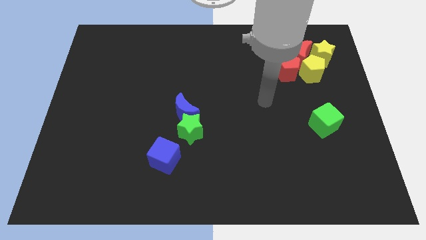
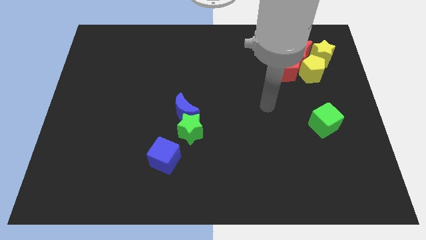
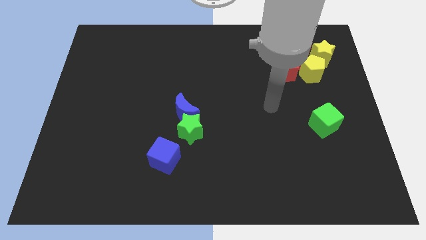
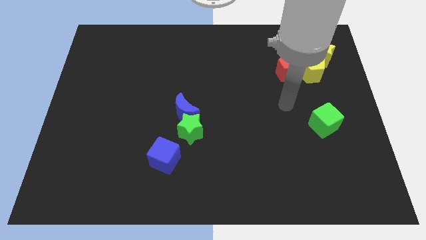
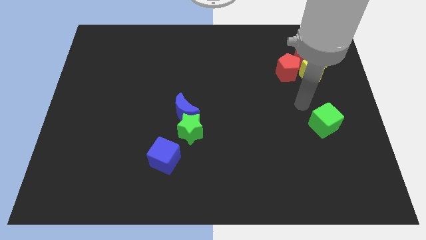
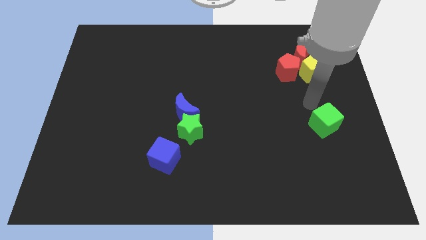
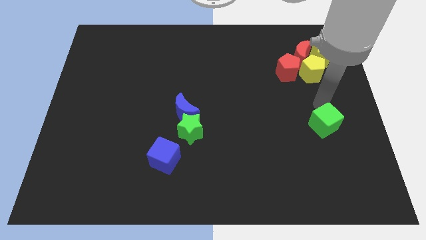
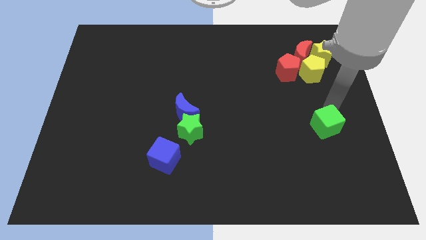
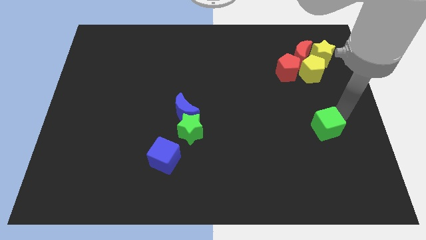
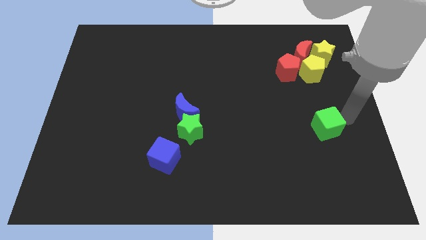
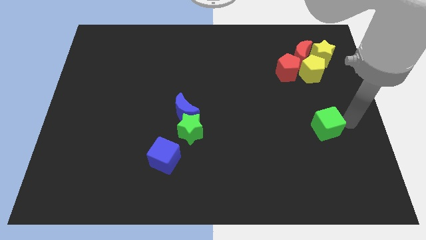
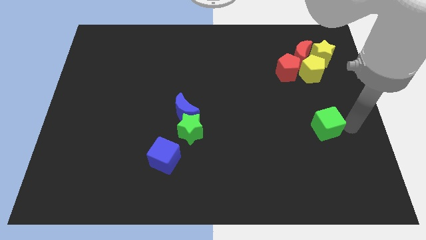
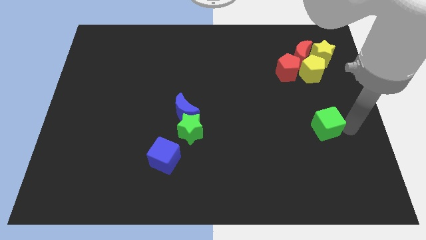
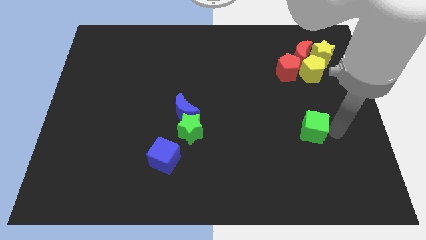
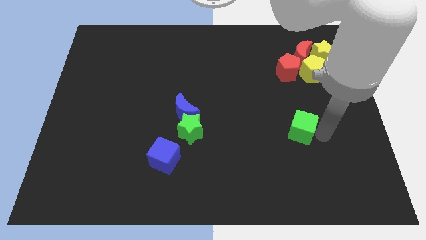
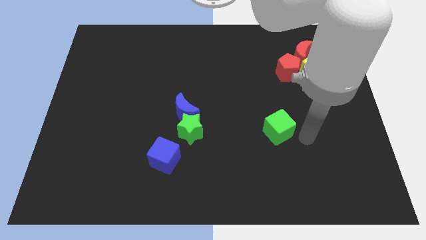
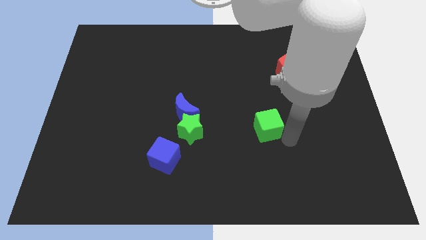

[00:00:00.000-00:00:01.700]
move the green cube to the right of the green star

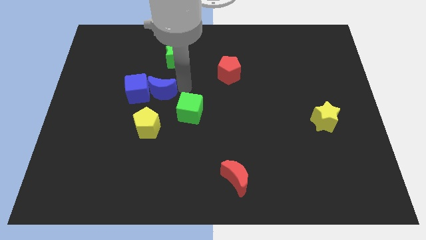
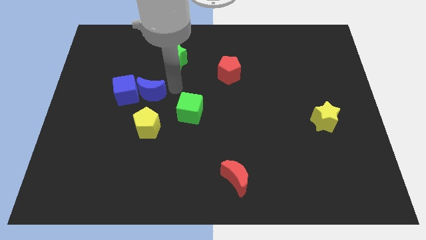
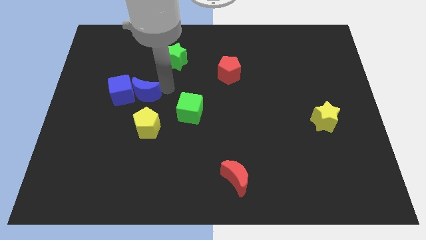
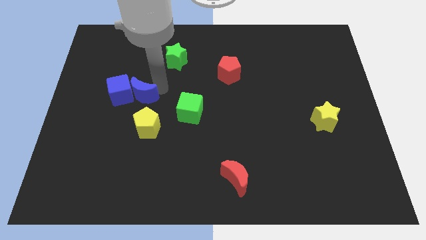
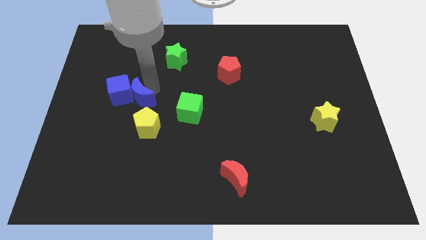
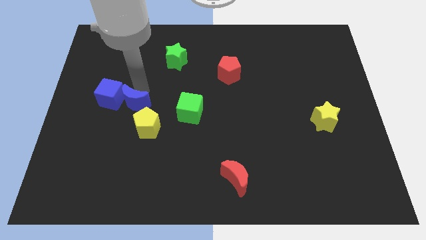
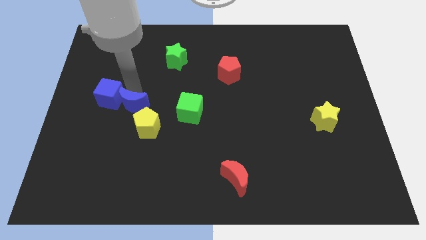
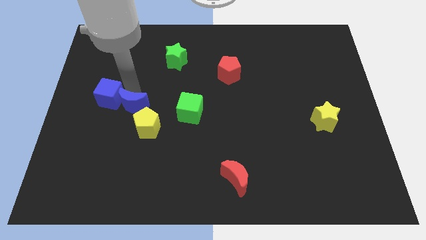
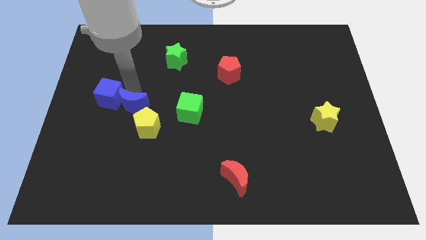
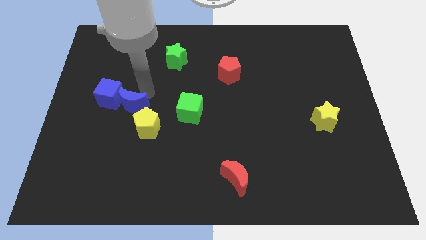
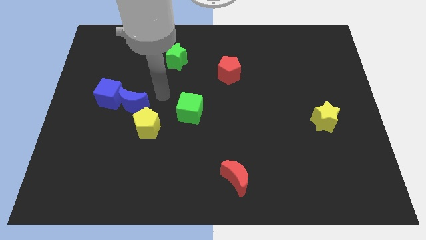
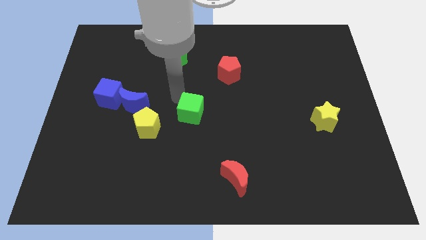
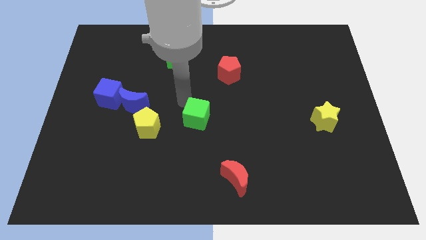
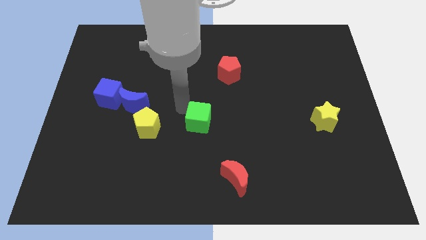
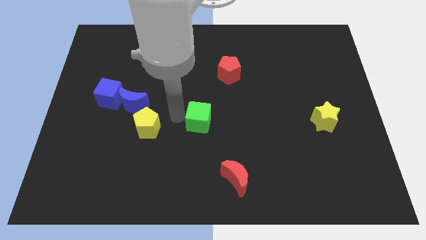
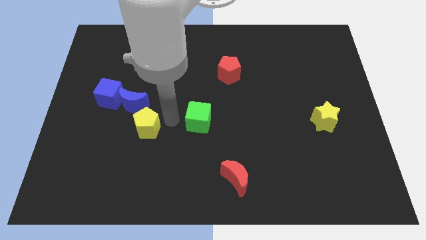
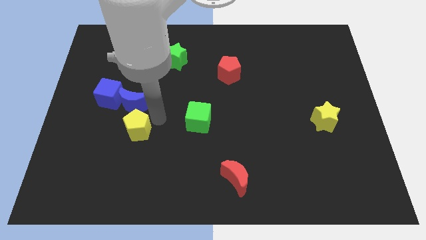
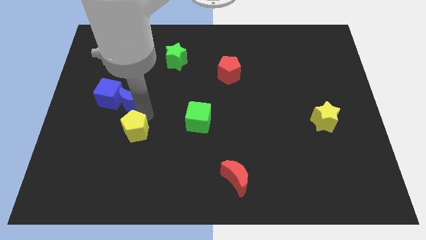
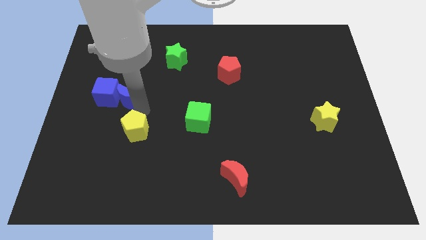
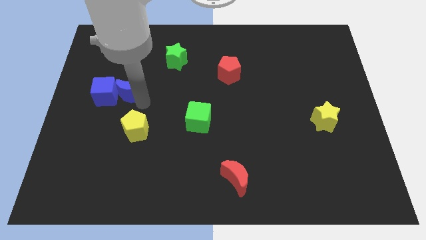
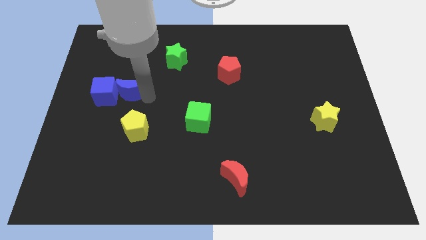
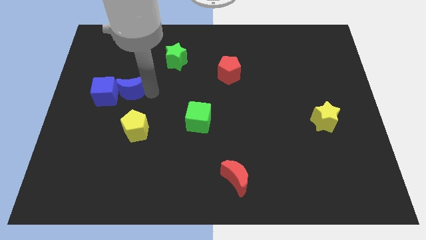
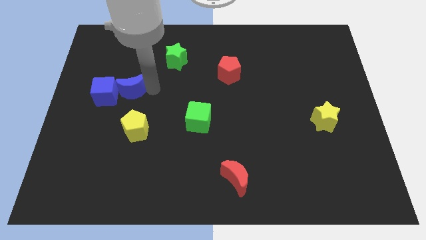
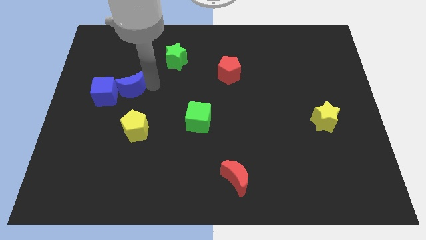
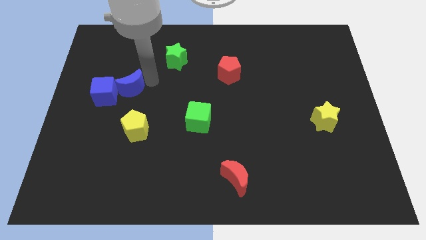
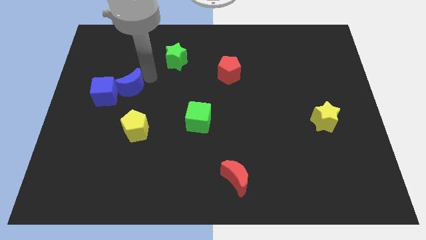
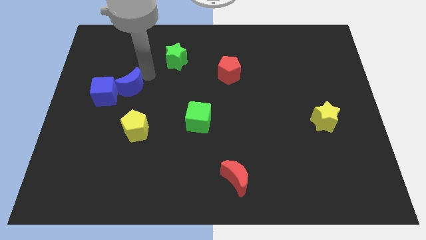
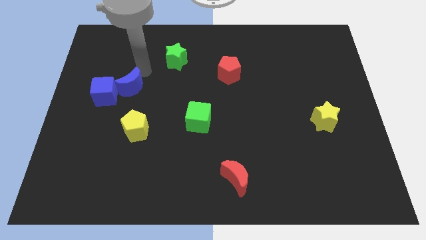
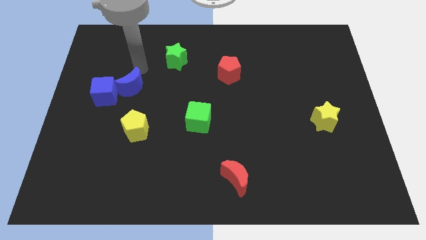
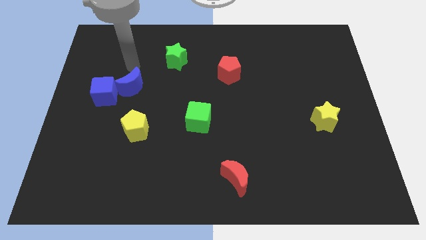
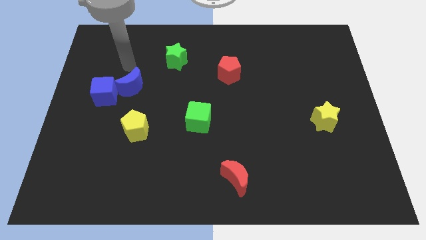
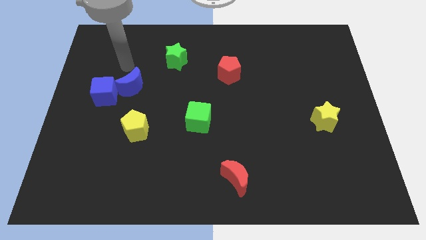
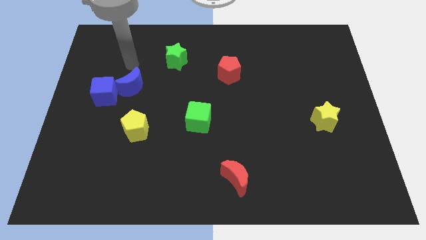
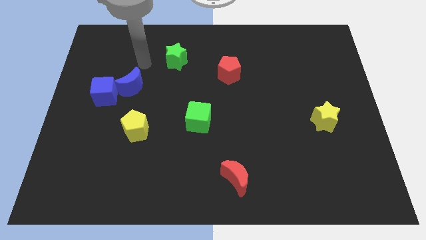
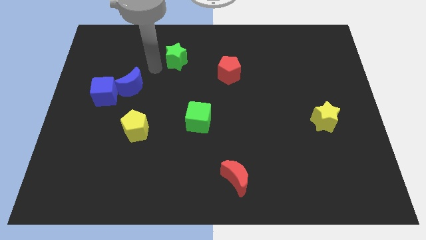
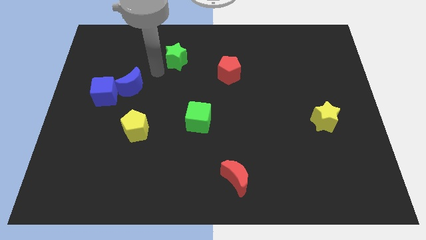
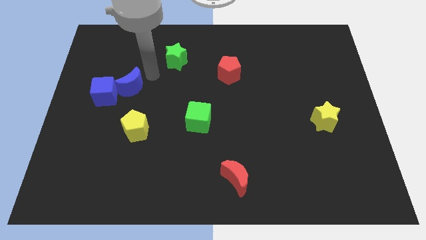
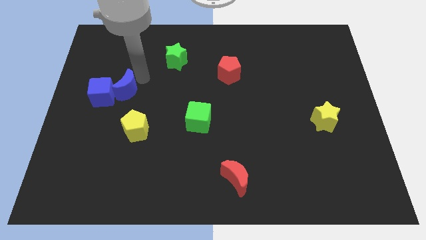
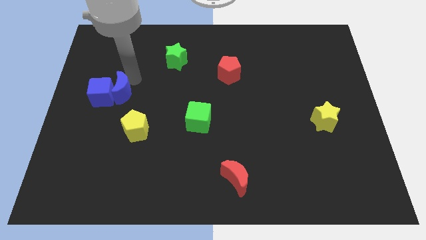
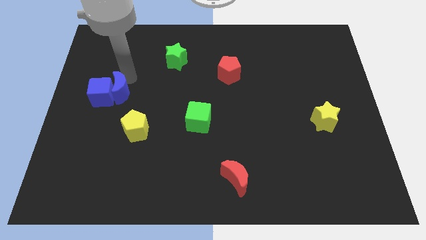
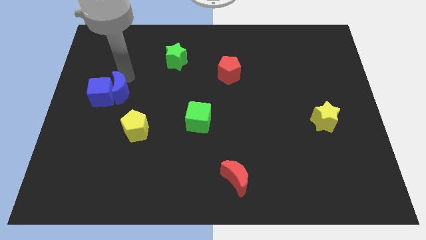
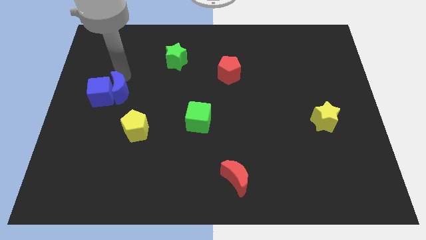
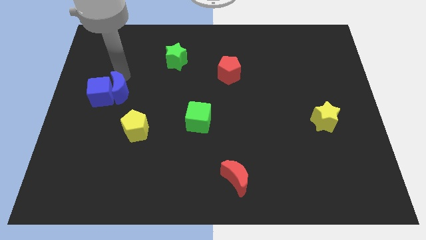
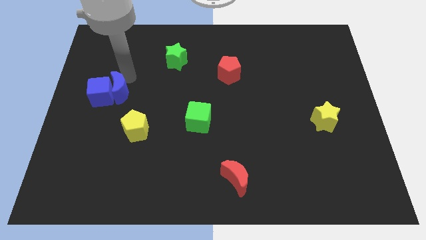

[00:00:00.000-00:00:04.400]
push the blue moon into the blue cube towards the left

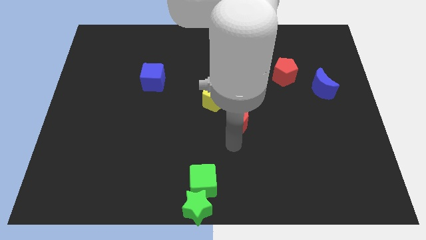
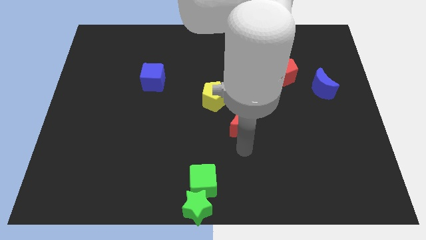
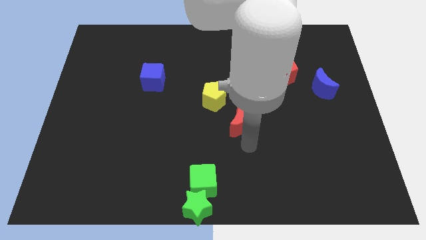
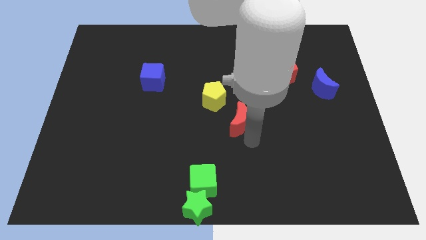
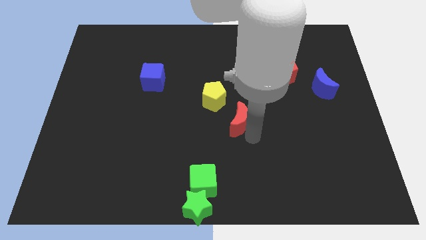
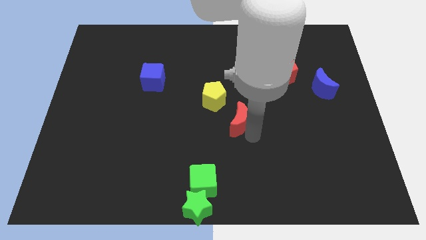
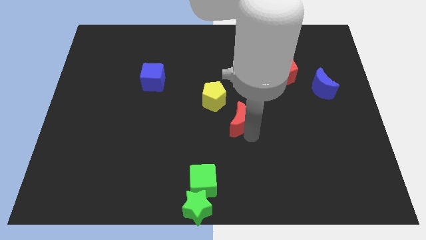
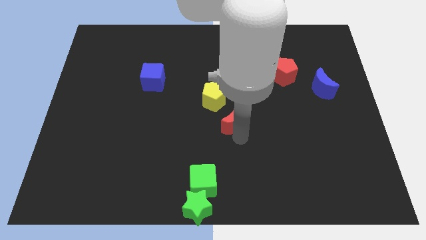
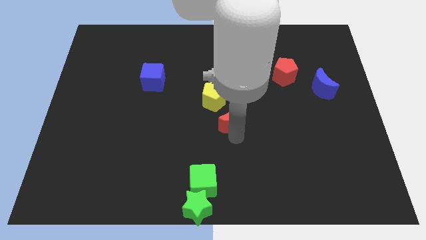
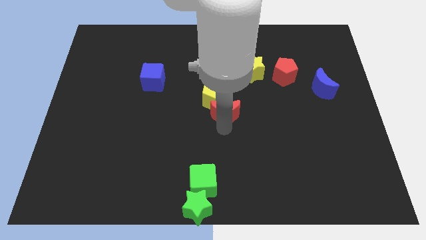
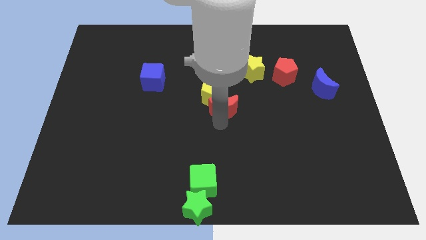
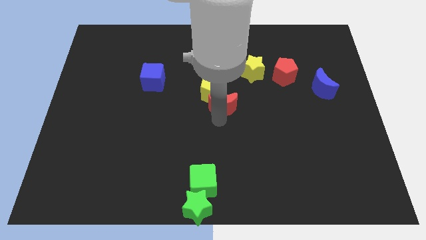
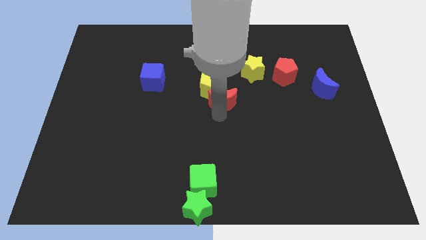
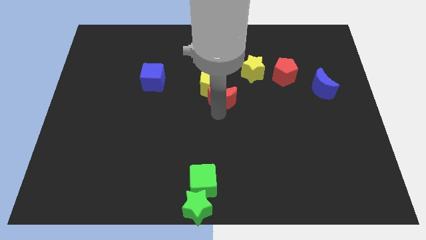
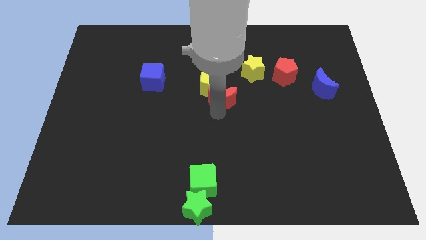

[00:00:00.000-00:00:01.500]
push the red moon into the yellow pentagon

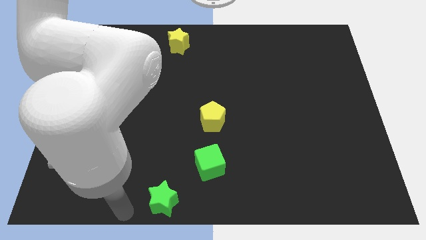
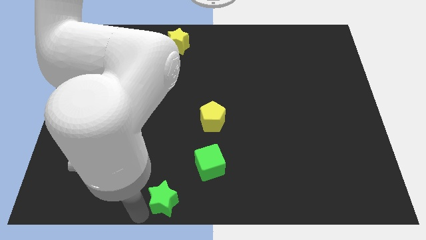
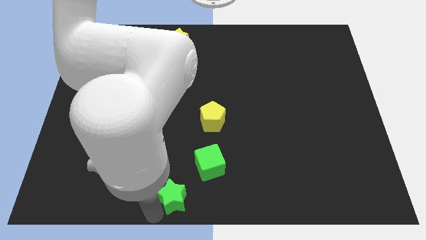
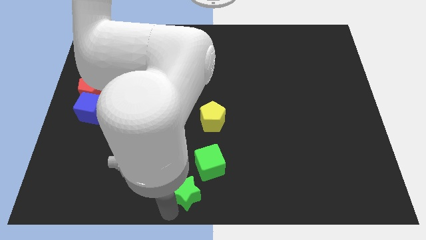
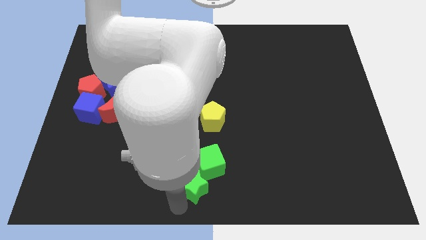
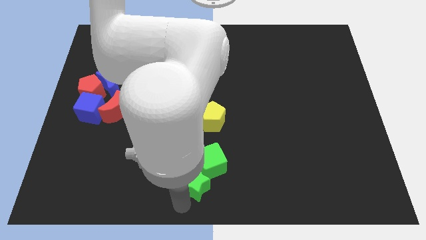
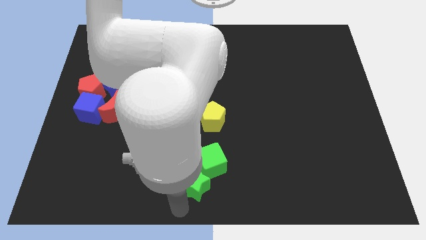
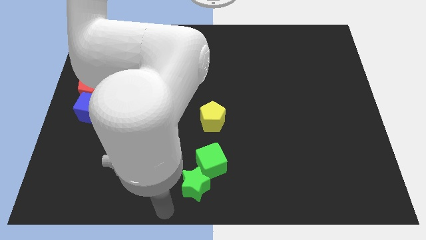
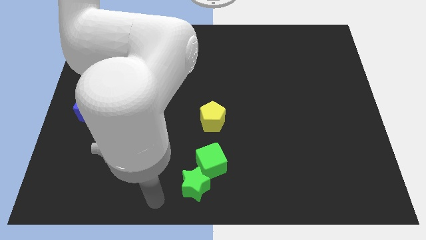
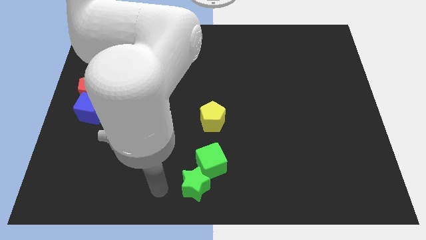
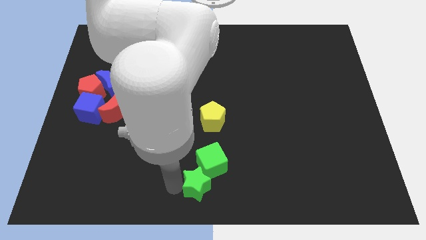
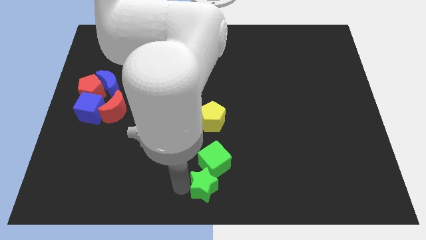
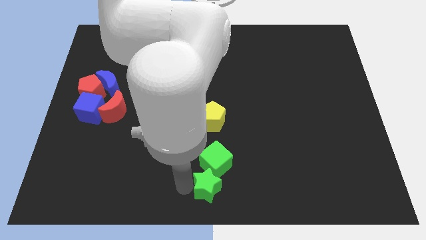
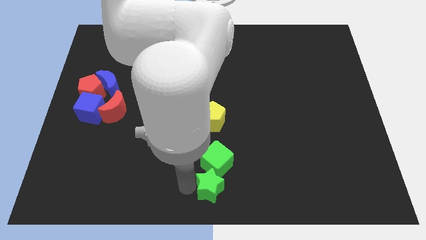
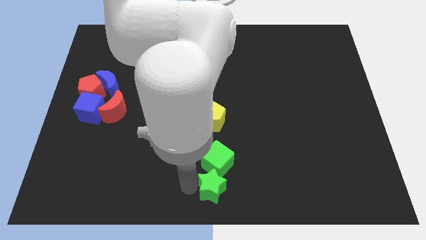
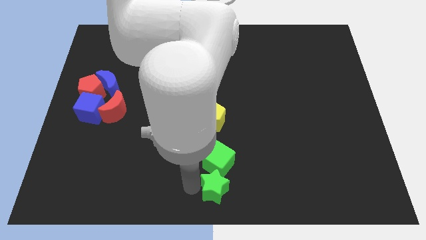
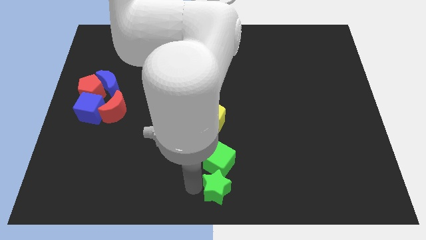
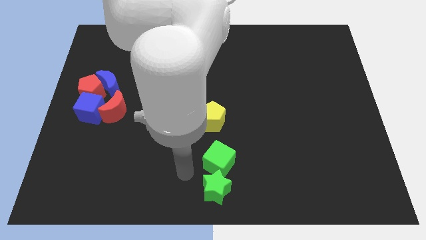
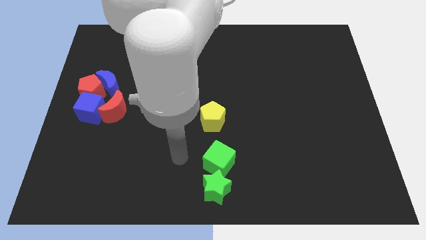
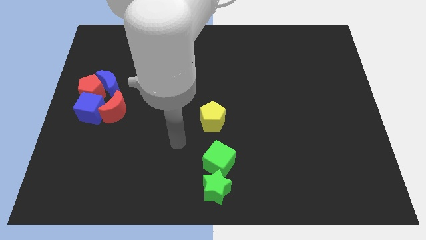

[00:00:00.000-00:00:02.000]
place the green star below the green cube
